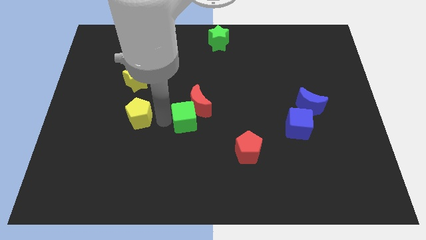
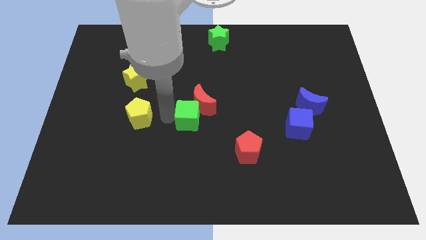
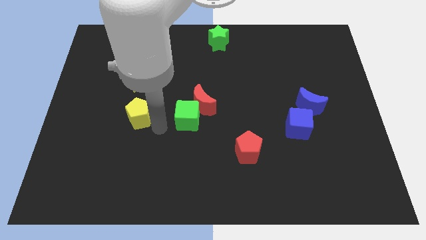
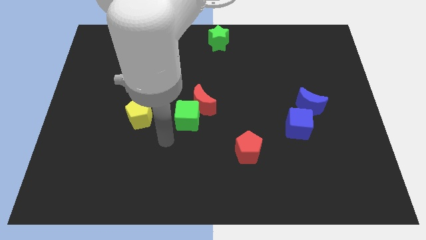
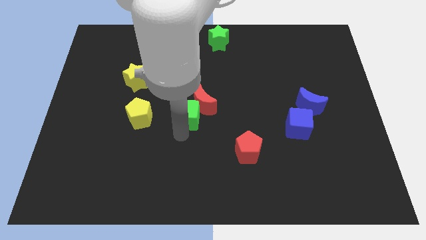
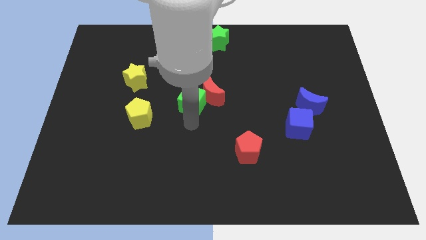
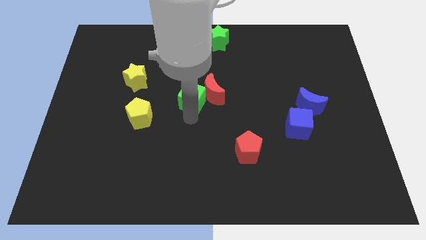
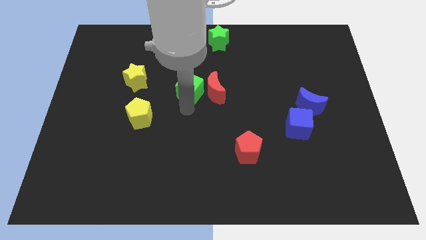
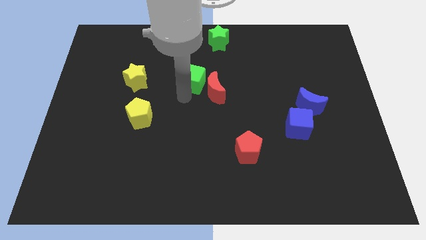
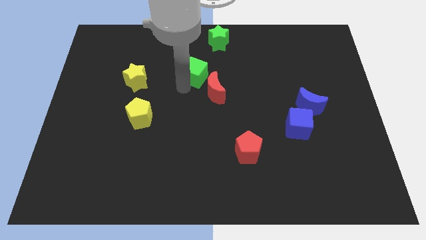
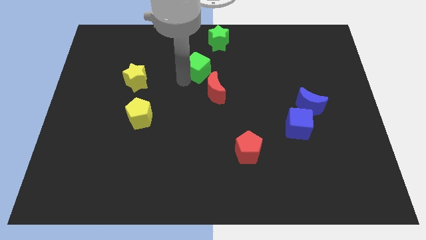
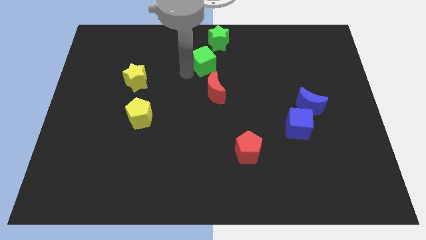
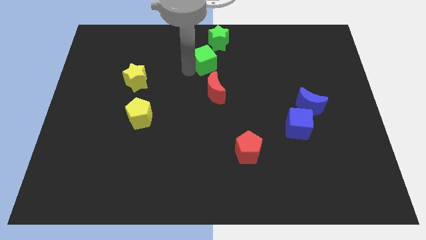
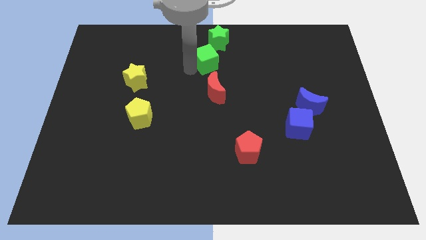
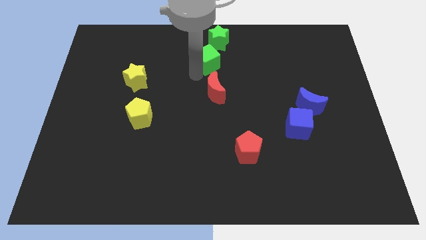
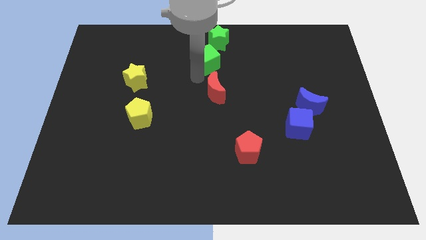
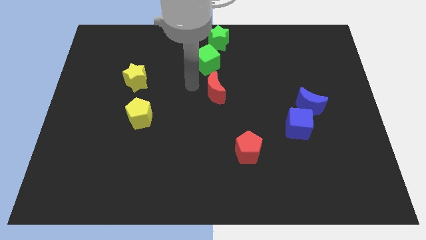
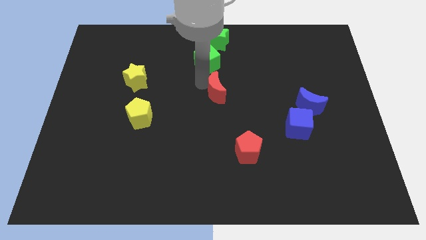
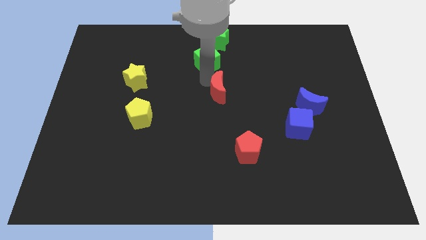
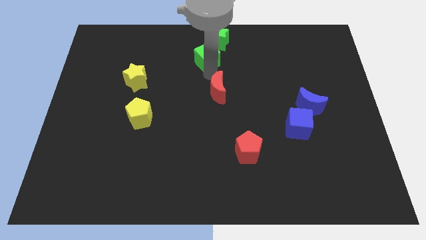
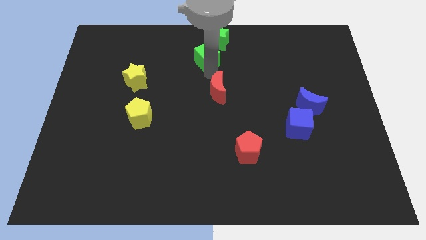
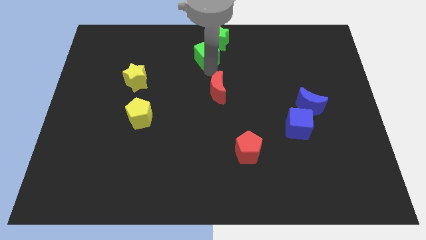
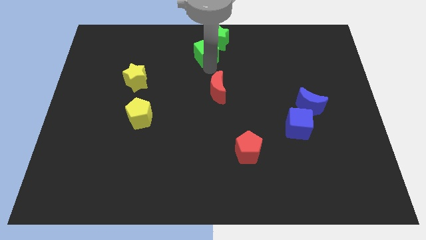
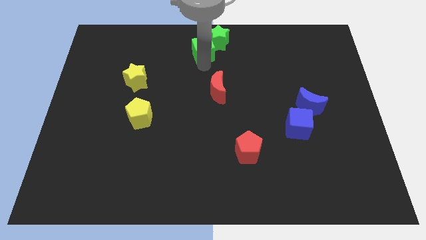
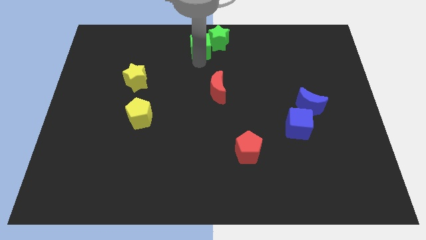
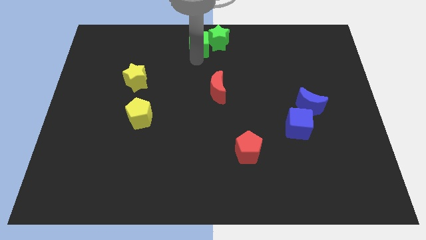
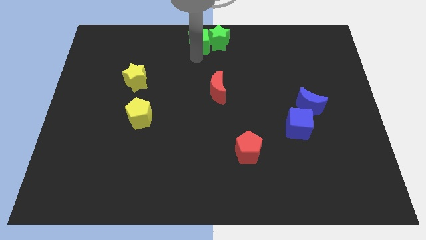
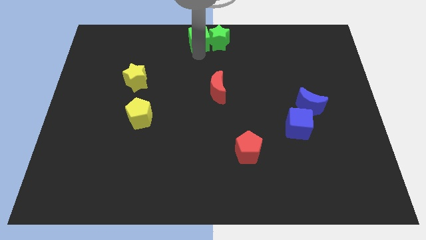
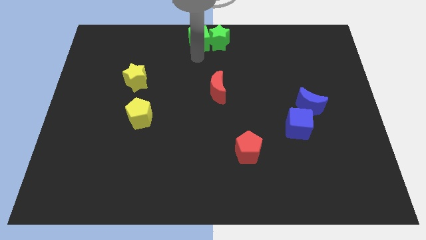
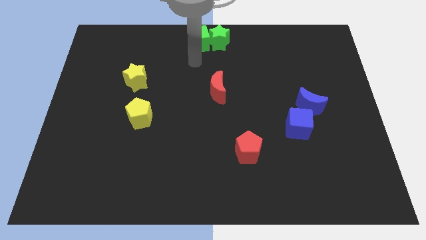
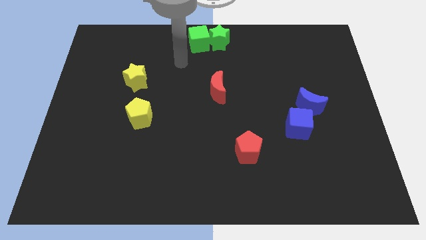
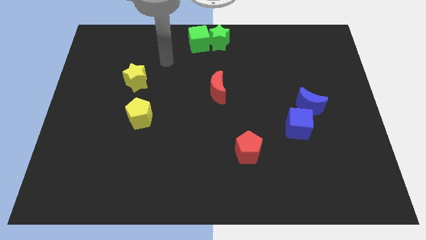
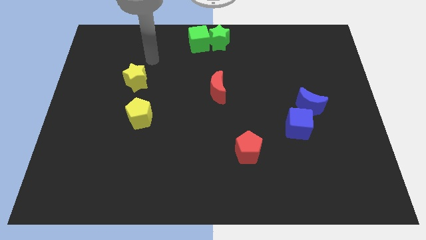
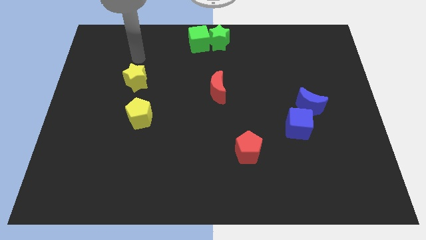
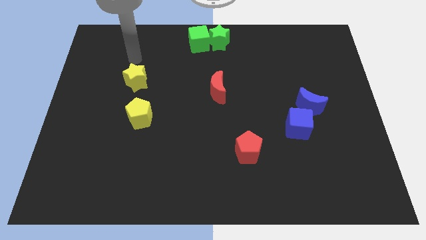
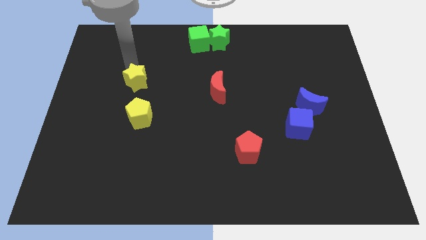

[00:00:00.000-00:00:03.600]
place the green cube left to the green star

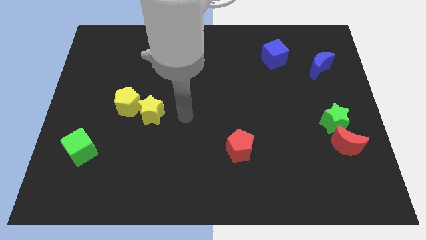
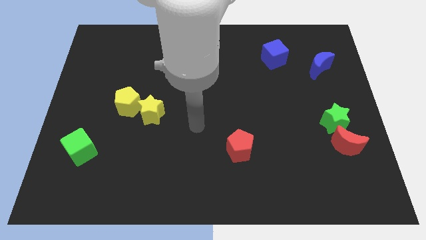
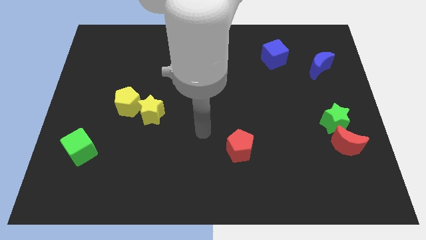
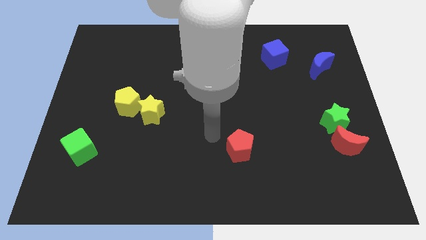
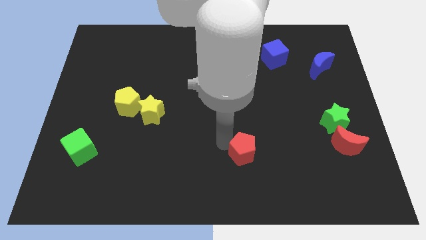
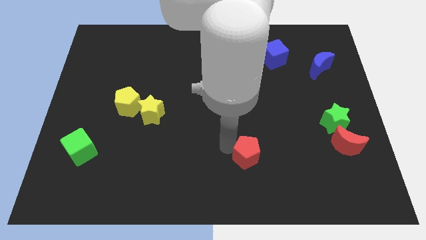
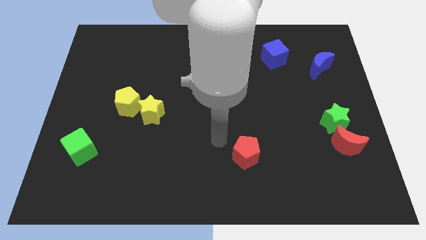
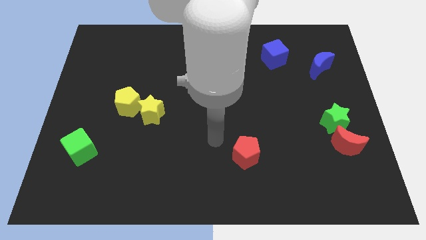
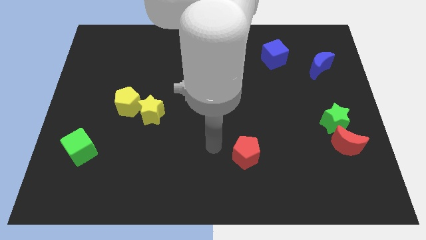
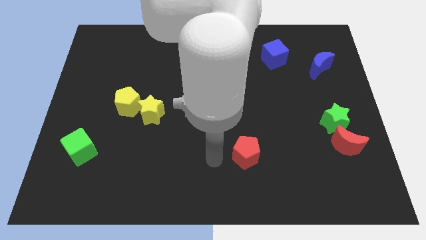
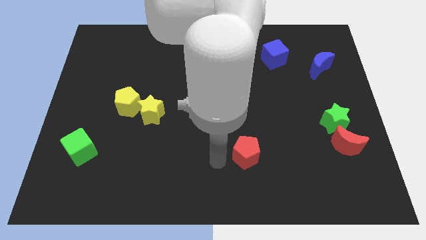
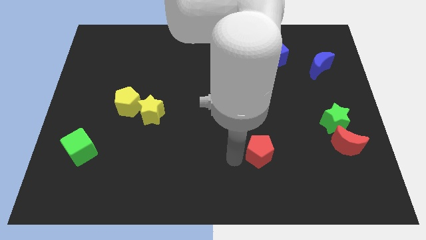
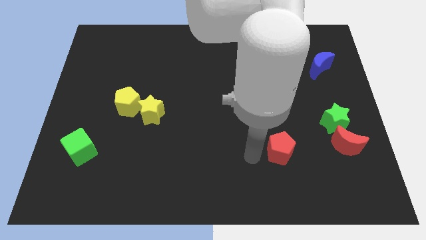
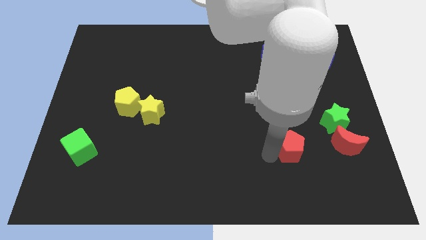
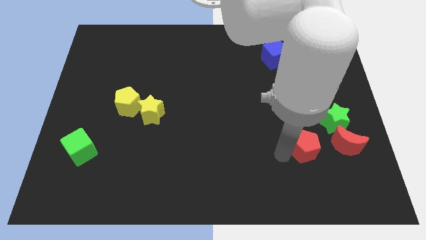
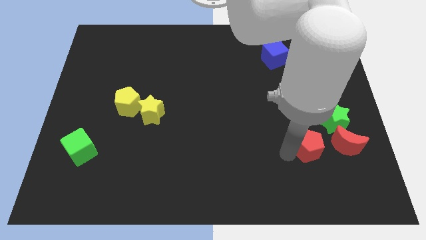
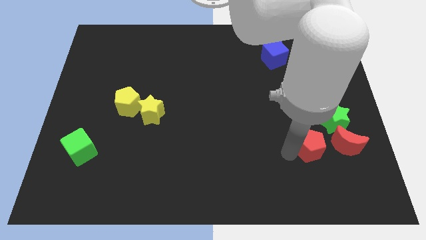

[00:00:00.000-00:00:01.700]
move the red pentagon towards red crescent

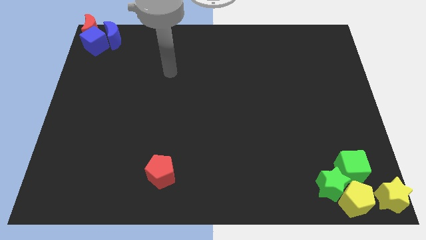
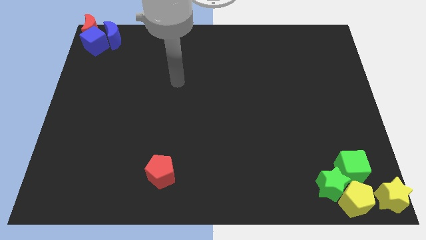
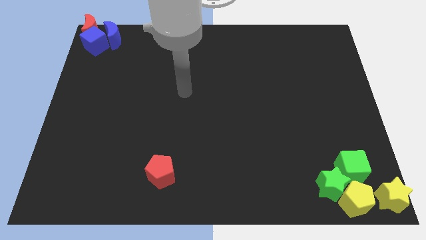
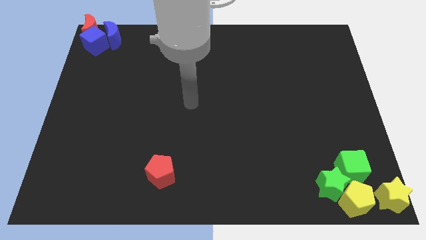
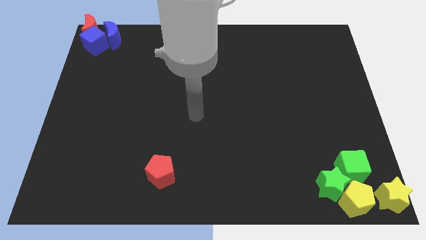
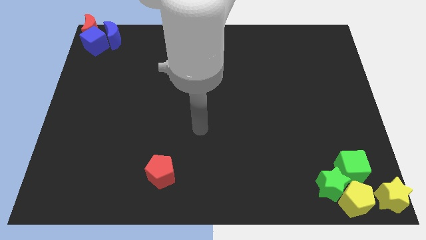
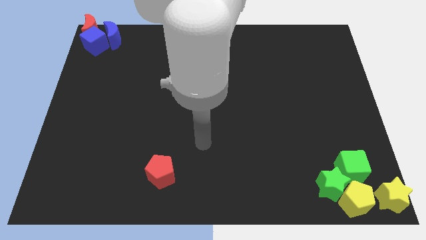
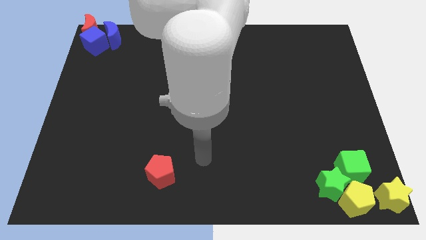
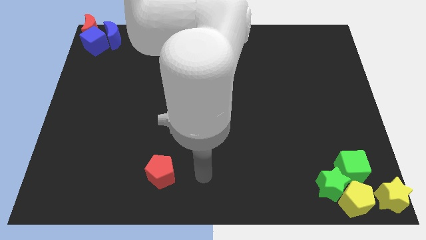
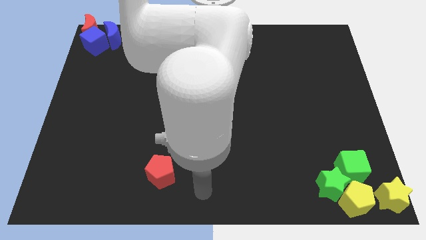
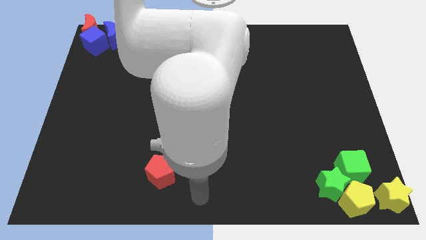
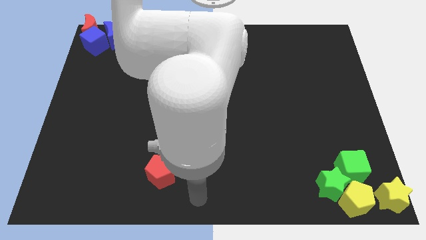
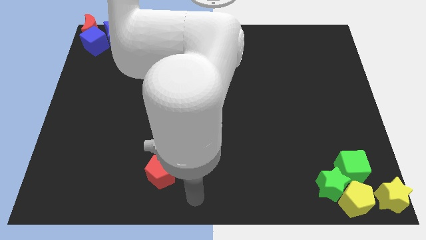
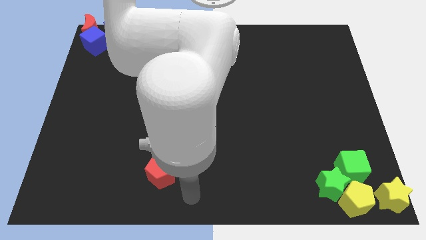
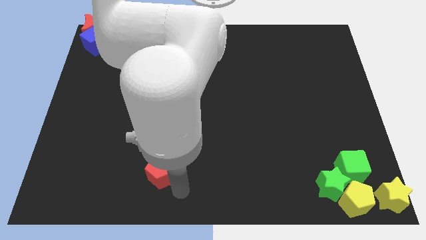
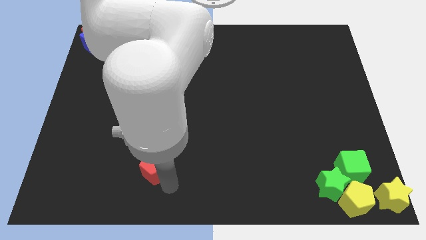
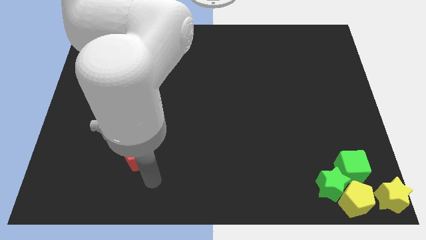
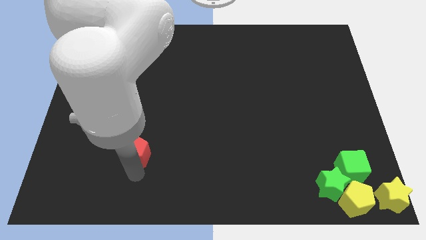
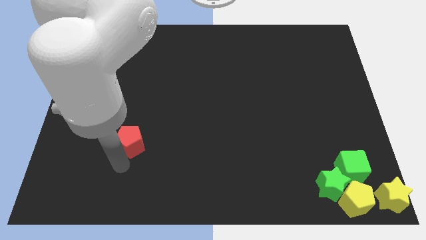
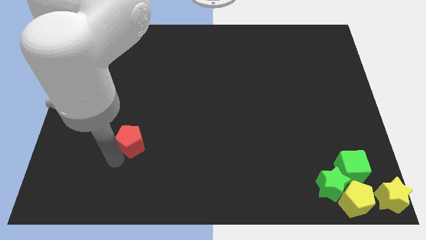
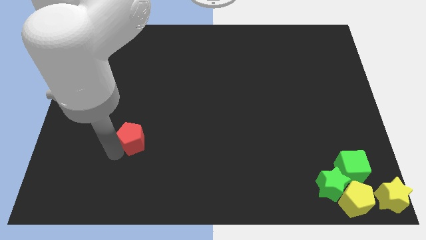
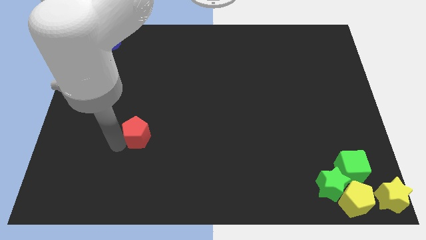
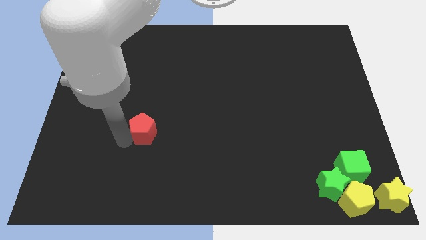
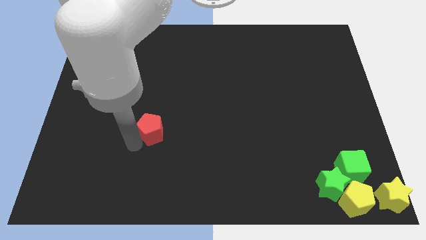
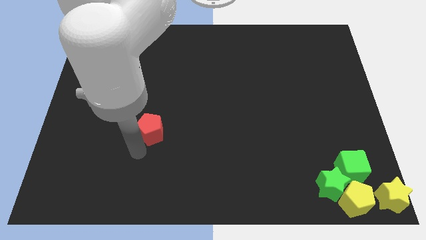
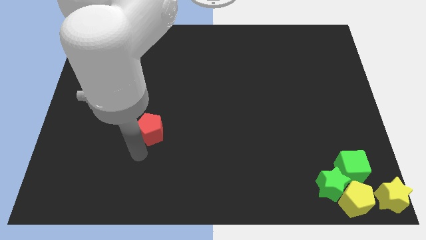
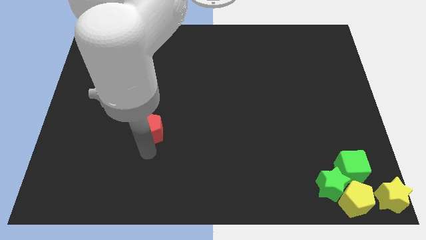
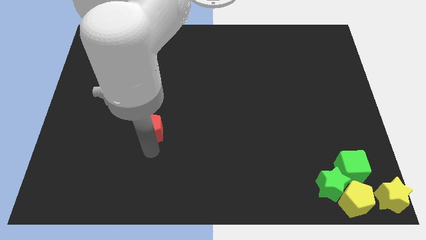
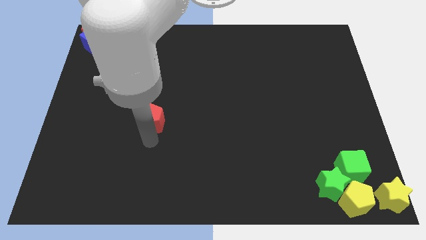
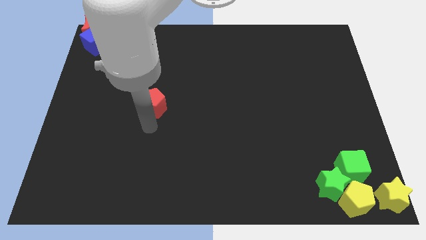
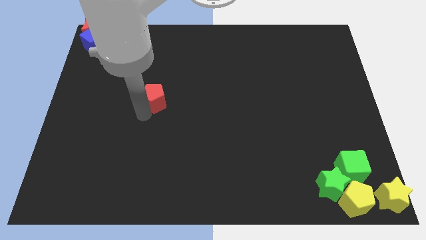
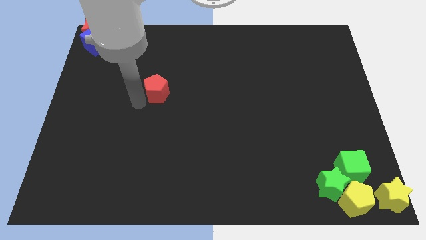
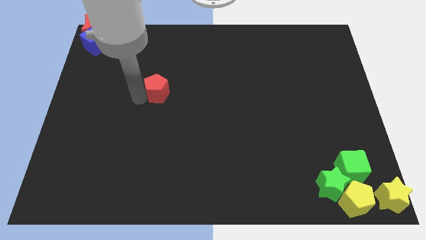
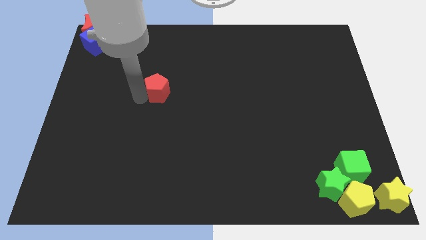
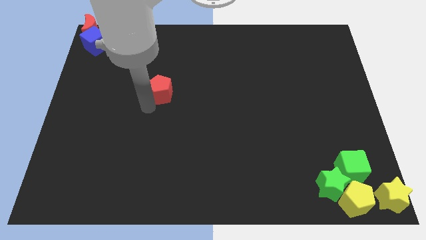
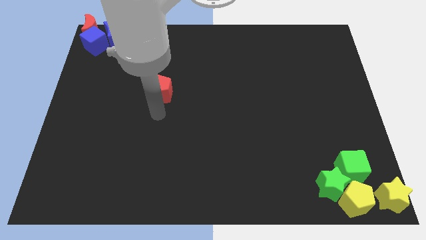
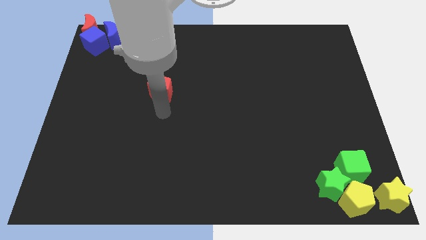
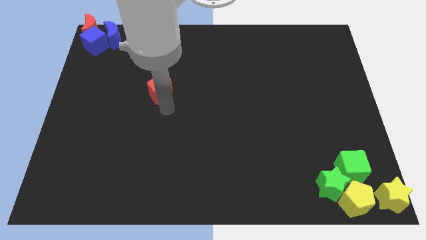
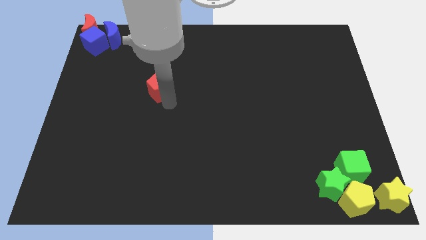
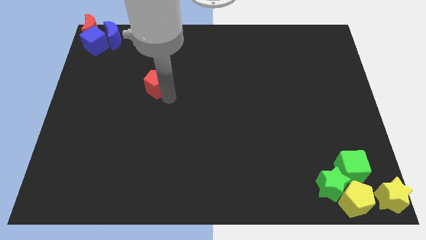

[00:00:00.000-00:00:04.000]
move the red pentagon towards top
